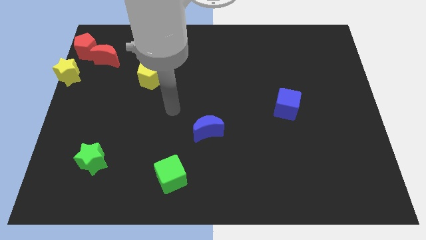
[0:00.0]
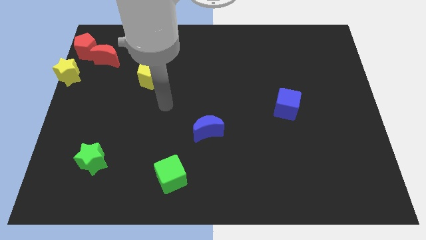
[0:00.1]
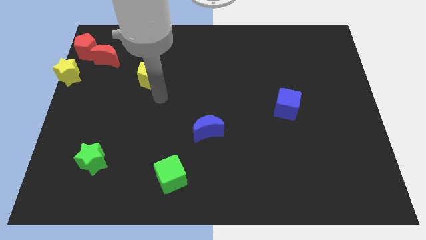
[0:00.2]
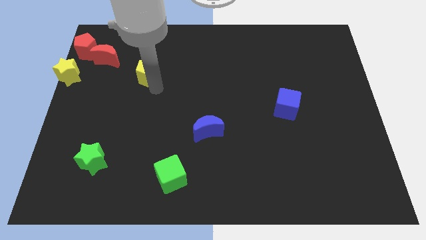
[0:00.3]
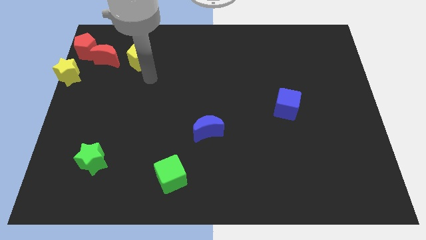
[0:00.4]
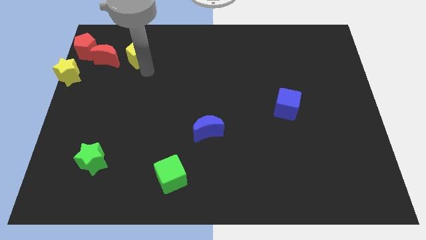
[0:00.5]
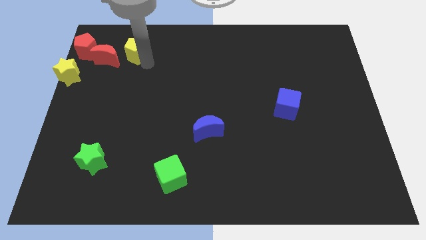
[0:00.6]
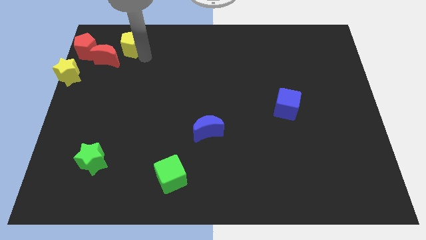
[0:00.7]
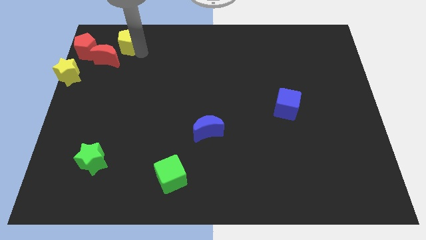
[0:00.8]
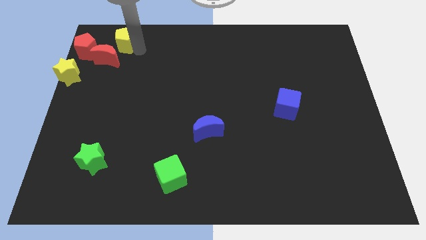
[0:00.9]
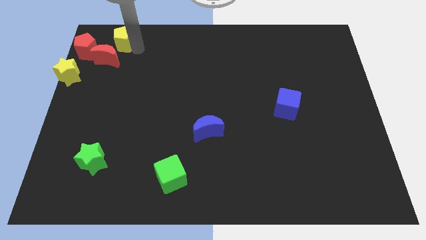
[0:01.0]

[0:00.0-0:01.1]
place the yellow pentagon towards the top right side of the red crescent

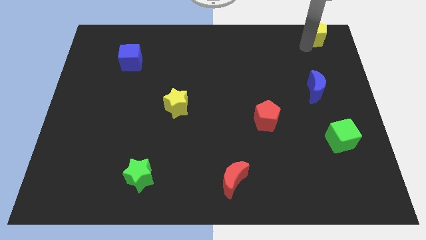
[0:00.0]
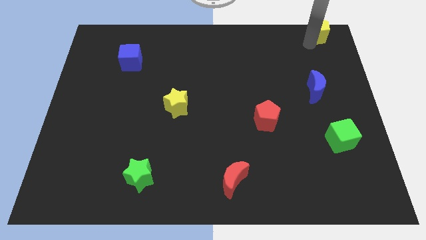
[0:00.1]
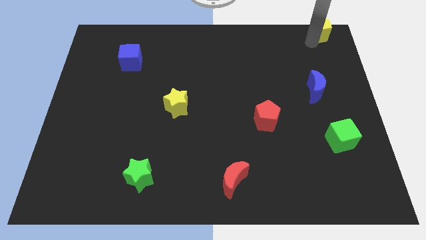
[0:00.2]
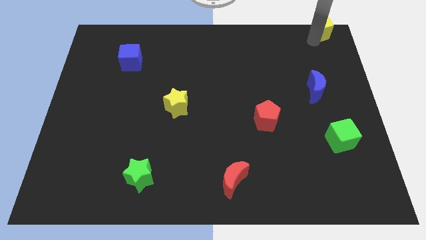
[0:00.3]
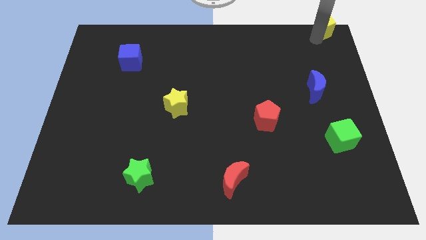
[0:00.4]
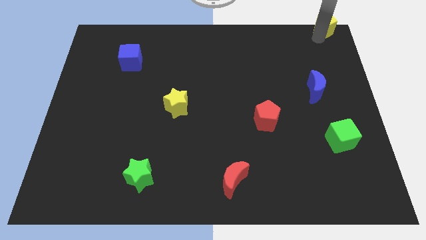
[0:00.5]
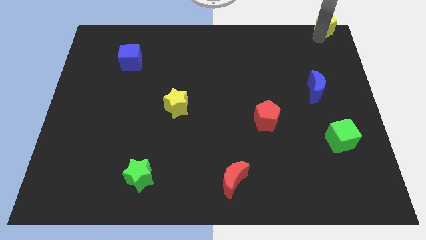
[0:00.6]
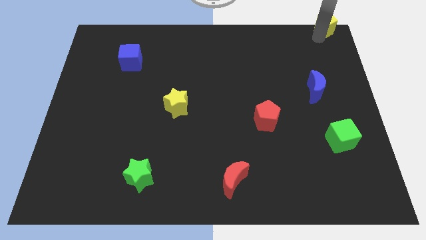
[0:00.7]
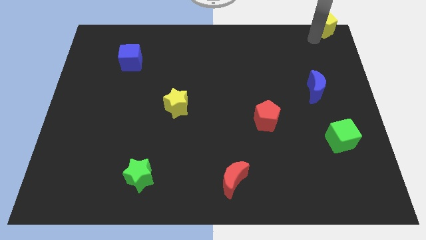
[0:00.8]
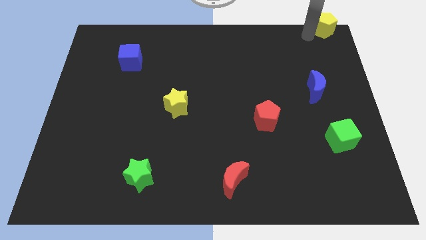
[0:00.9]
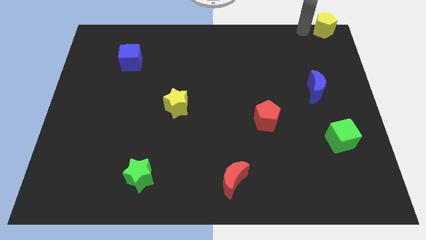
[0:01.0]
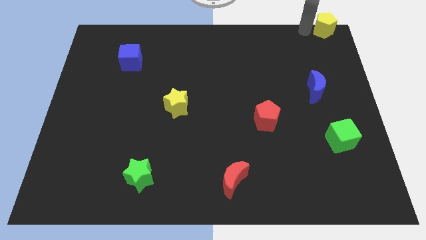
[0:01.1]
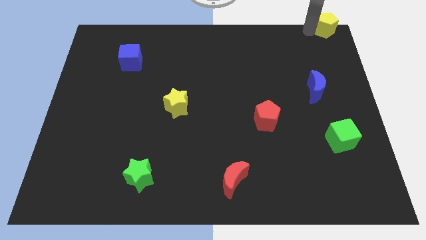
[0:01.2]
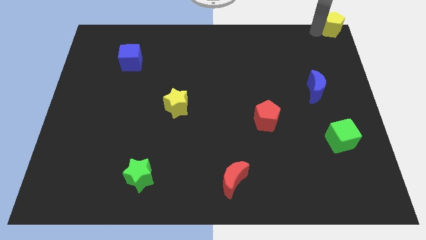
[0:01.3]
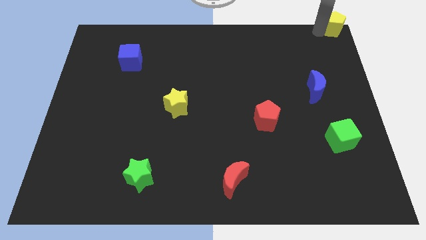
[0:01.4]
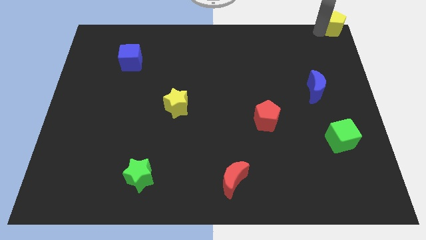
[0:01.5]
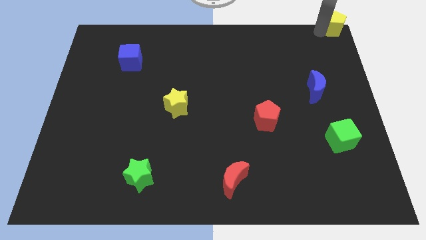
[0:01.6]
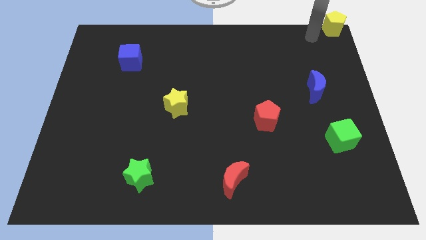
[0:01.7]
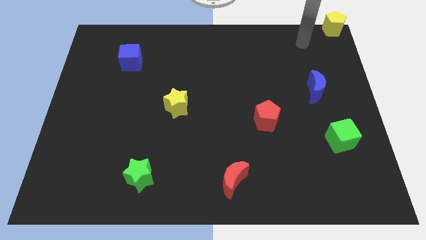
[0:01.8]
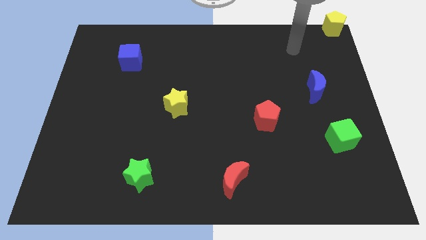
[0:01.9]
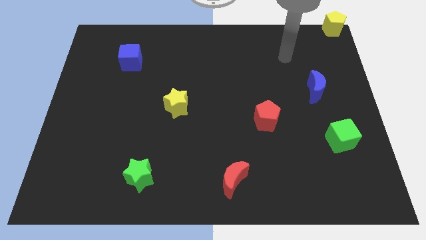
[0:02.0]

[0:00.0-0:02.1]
place the yellow pentagon at top right corner of the board

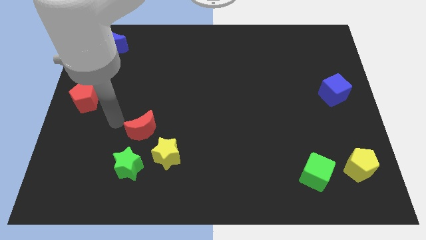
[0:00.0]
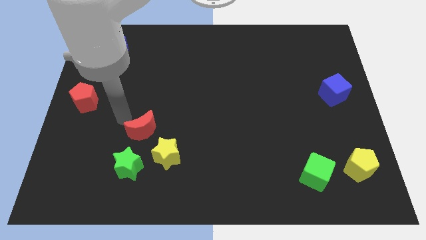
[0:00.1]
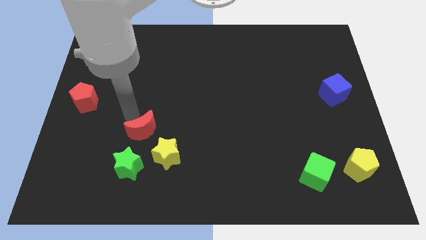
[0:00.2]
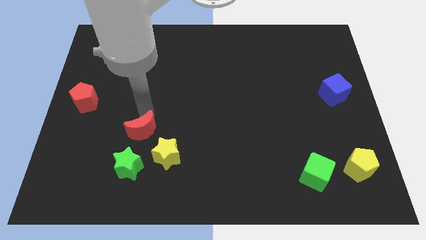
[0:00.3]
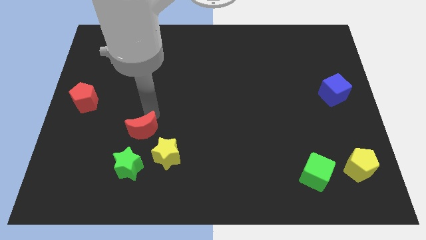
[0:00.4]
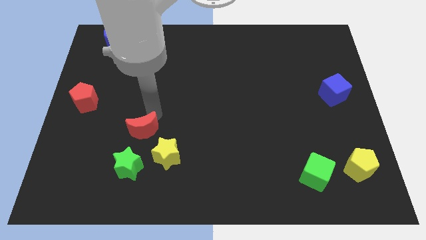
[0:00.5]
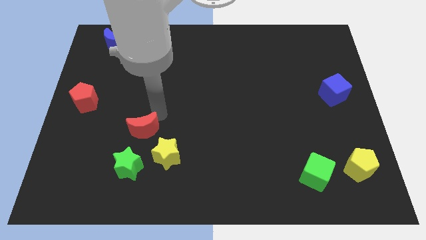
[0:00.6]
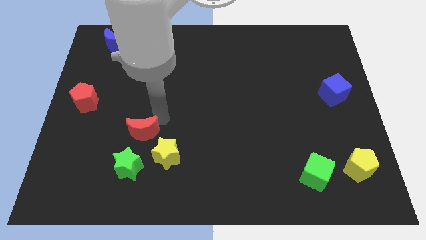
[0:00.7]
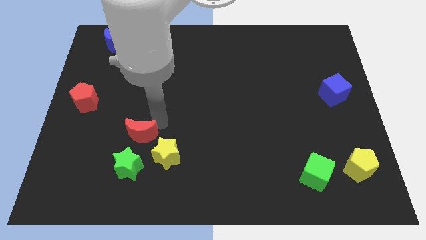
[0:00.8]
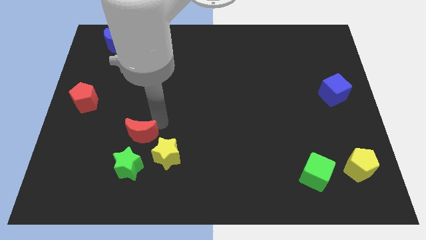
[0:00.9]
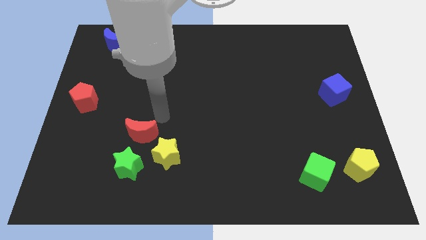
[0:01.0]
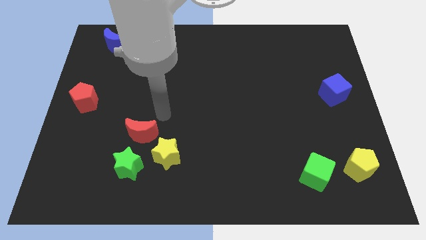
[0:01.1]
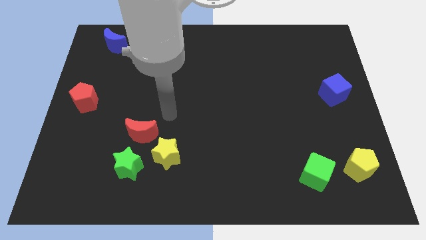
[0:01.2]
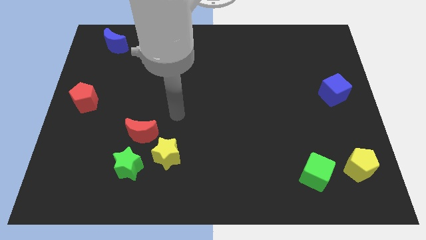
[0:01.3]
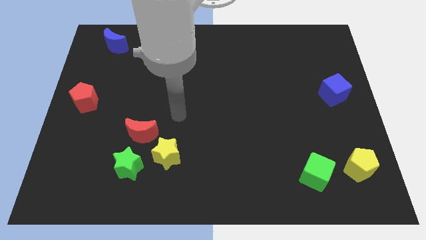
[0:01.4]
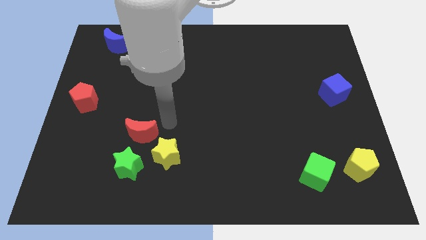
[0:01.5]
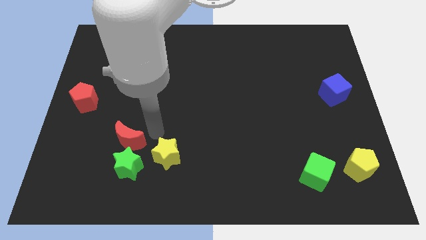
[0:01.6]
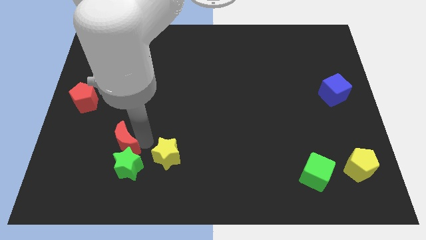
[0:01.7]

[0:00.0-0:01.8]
place the red crescent to the top of the green star

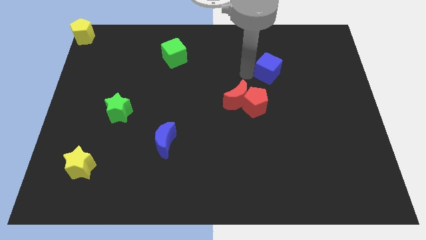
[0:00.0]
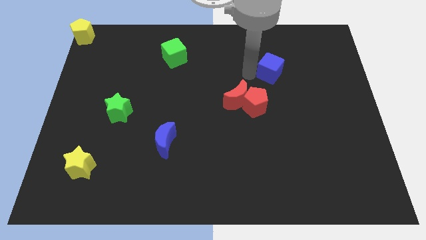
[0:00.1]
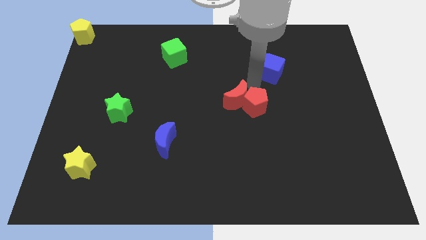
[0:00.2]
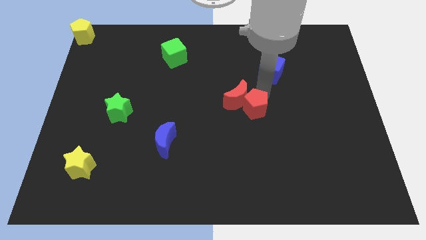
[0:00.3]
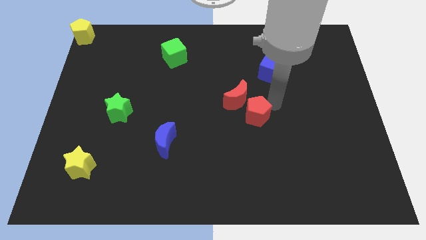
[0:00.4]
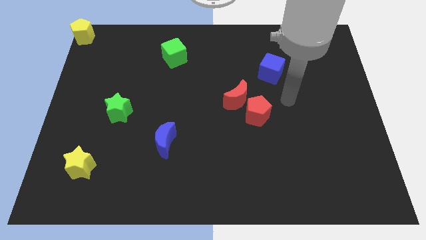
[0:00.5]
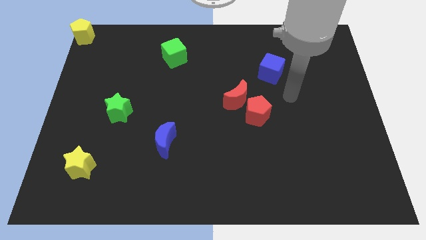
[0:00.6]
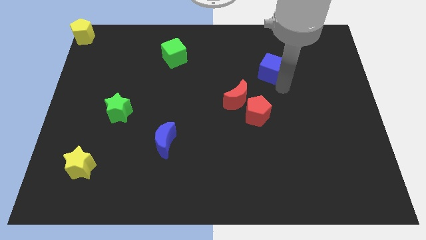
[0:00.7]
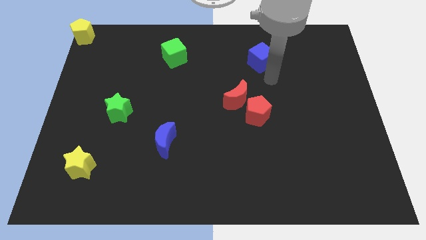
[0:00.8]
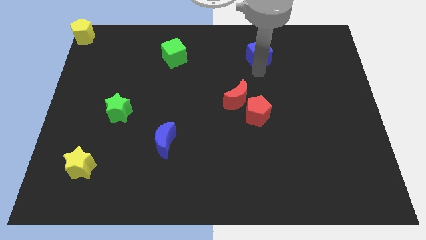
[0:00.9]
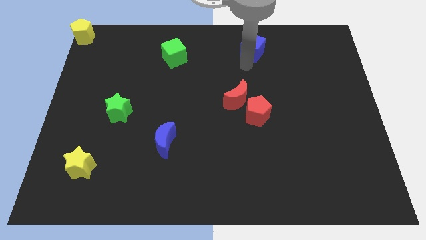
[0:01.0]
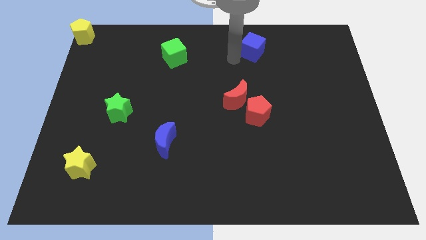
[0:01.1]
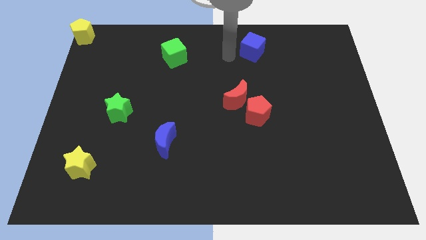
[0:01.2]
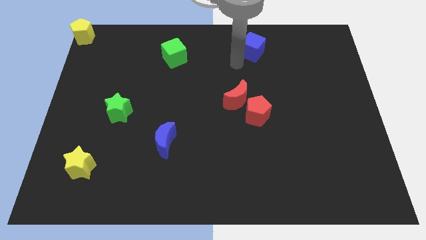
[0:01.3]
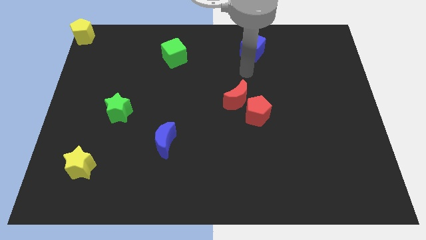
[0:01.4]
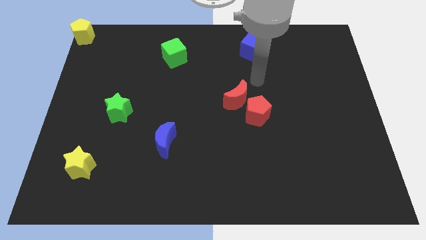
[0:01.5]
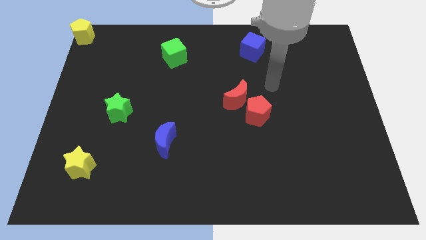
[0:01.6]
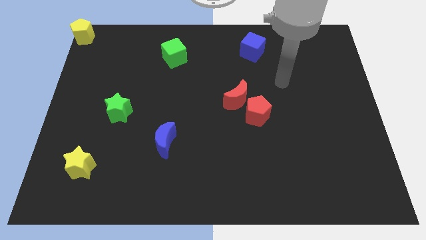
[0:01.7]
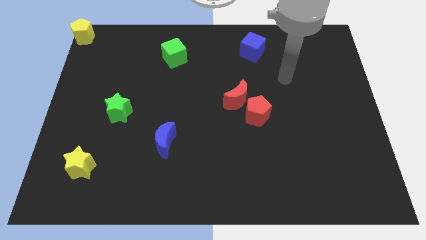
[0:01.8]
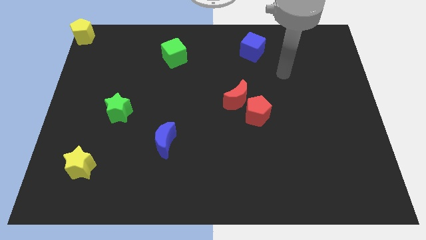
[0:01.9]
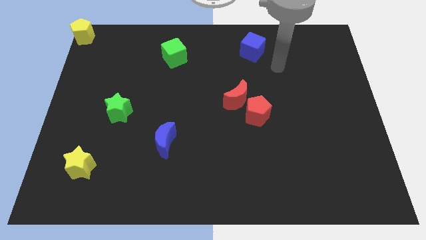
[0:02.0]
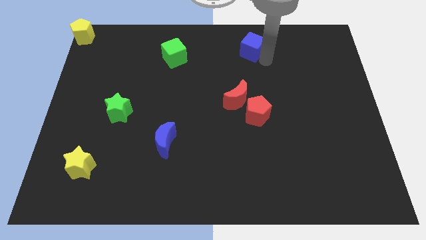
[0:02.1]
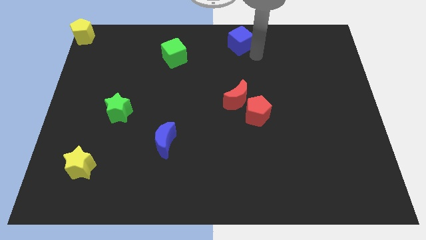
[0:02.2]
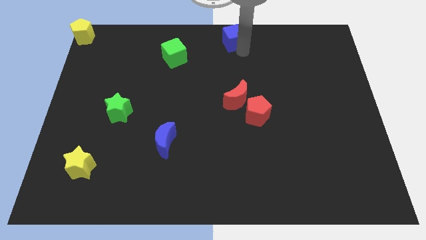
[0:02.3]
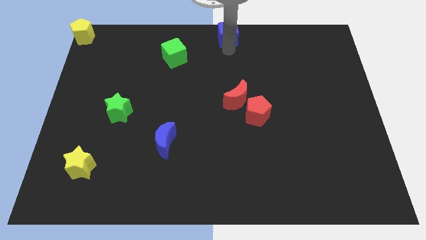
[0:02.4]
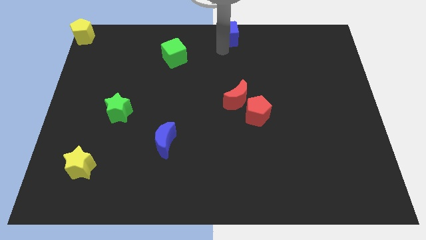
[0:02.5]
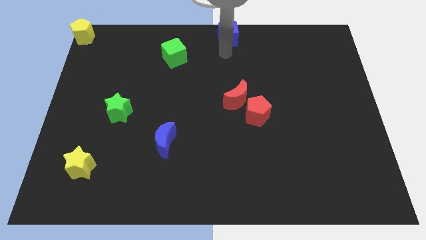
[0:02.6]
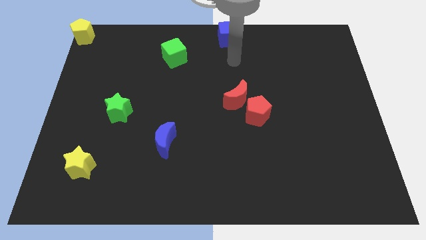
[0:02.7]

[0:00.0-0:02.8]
move the blue cube towards the top center of the board

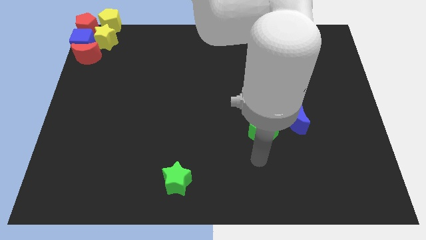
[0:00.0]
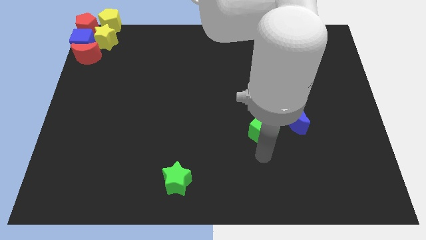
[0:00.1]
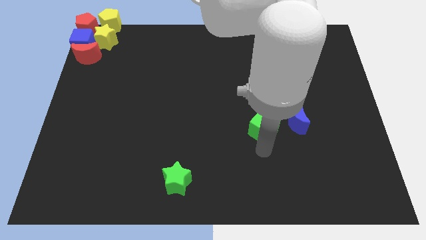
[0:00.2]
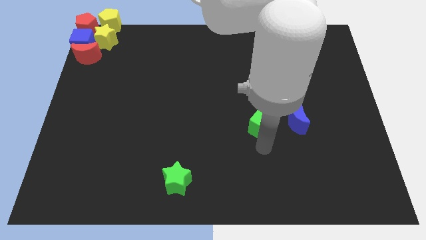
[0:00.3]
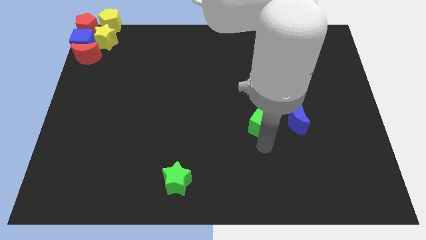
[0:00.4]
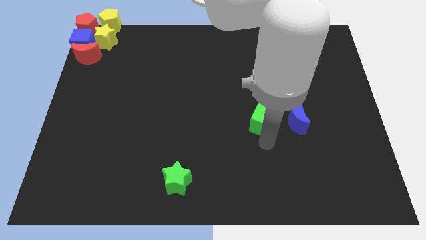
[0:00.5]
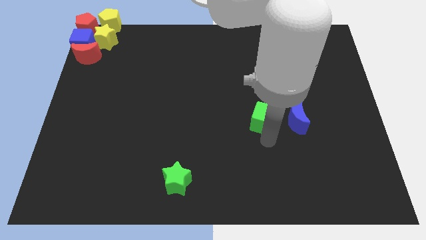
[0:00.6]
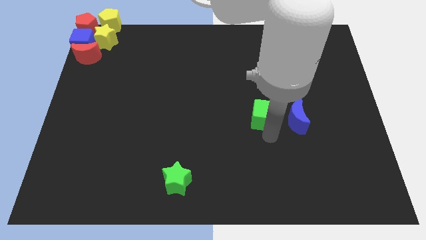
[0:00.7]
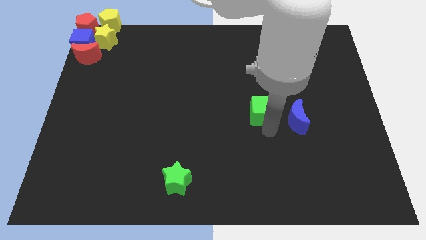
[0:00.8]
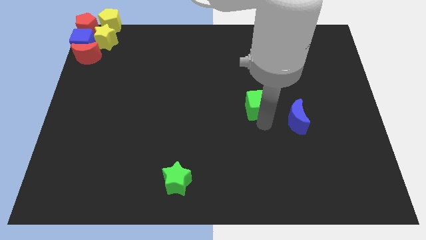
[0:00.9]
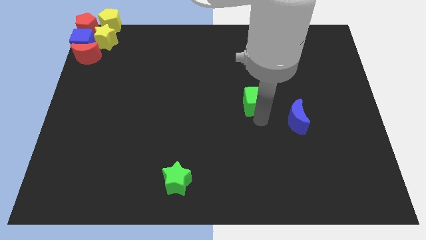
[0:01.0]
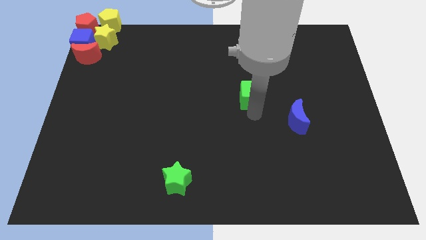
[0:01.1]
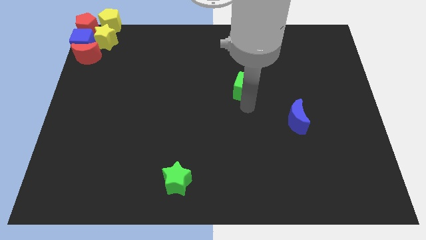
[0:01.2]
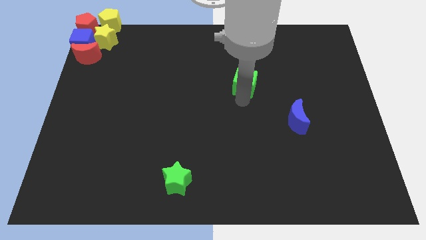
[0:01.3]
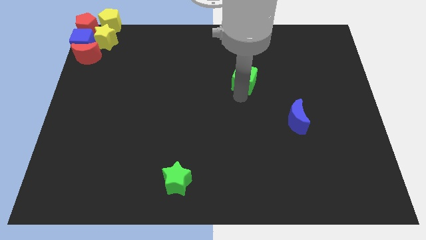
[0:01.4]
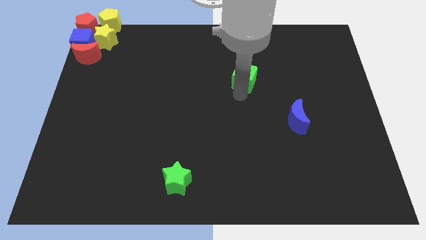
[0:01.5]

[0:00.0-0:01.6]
slightly move the green cube up
